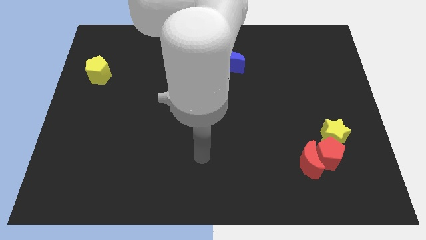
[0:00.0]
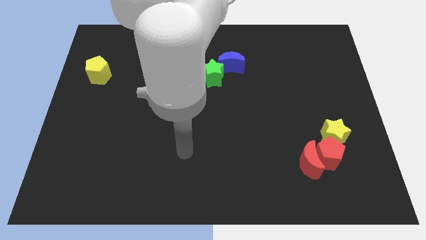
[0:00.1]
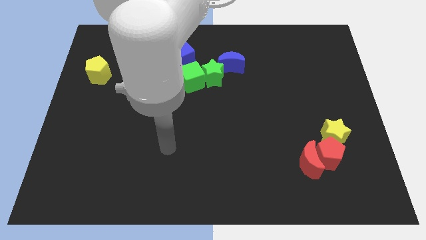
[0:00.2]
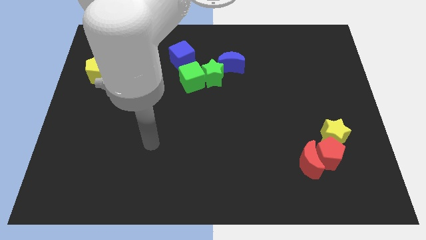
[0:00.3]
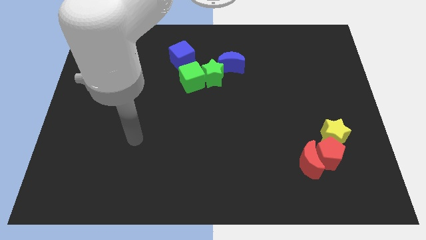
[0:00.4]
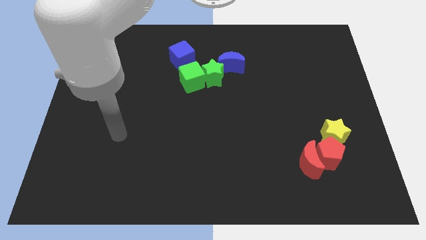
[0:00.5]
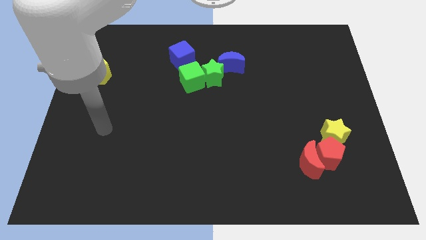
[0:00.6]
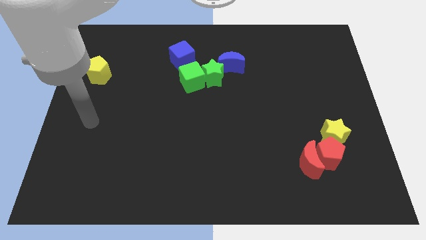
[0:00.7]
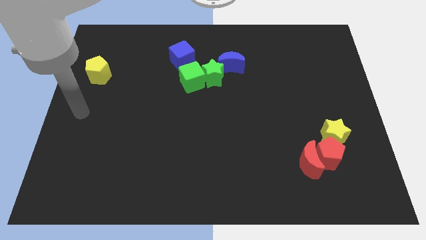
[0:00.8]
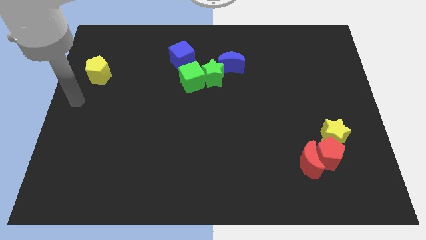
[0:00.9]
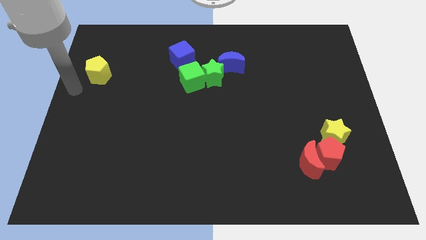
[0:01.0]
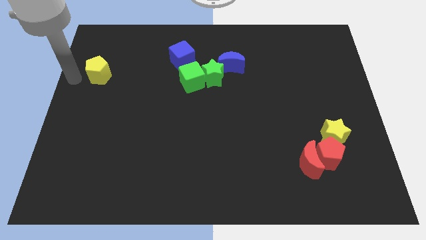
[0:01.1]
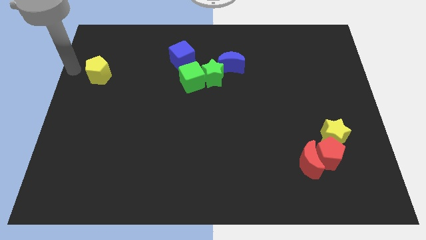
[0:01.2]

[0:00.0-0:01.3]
push your arm at the left side of the yellow pentagon

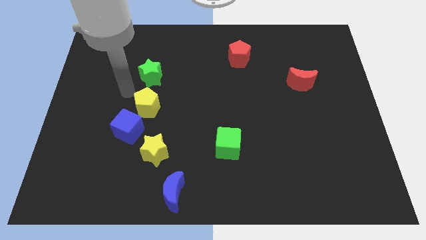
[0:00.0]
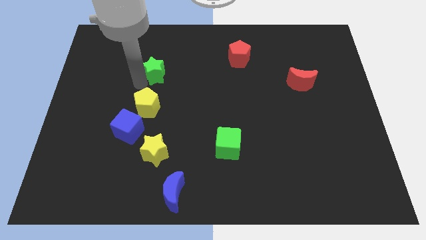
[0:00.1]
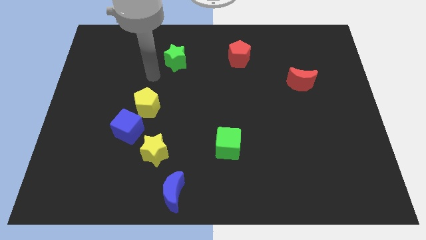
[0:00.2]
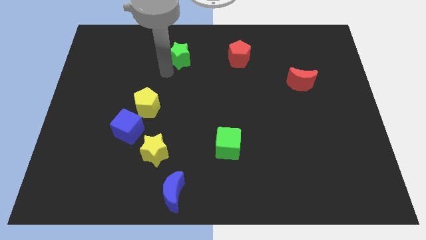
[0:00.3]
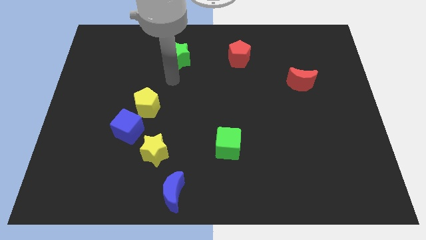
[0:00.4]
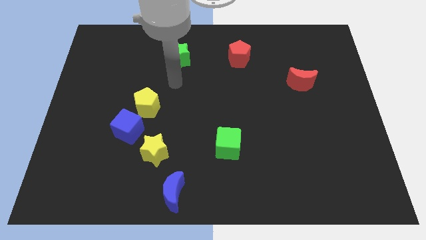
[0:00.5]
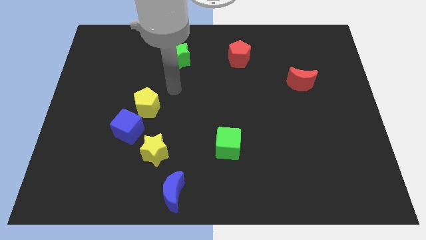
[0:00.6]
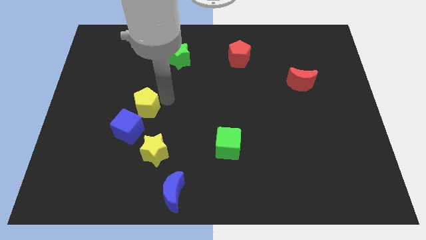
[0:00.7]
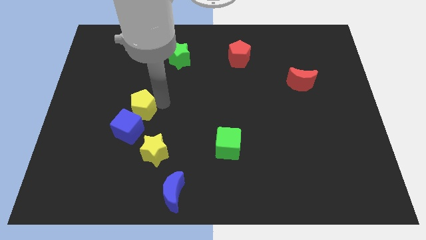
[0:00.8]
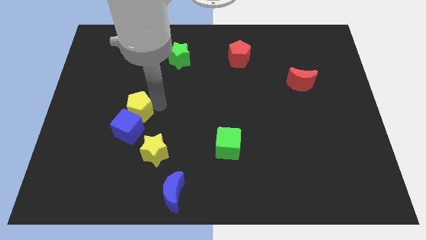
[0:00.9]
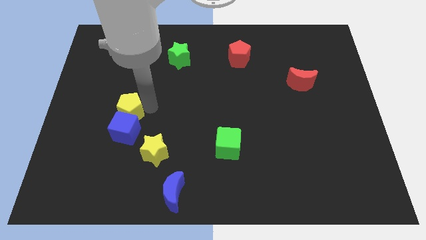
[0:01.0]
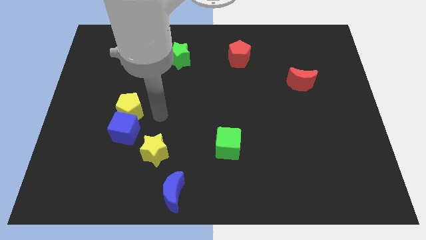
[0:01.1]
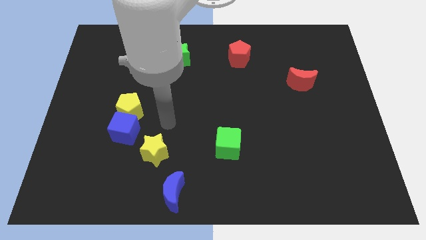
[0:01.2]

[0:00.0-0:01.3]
put the yellow pentagon into the blue cube

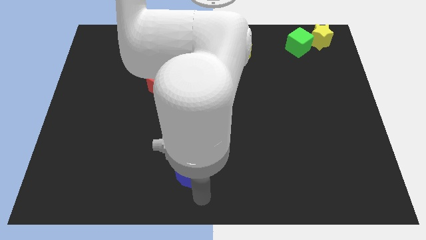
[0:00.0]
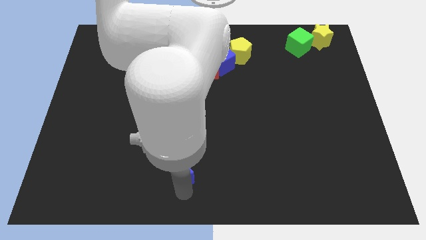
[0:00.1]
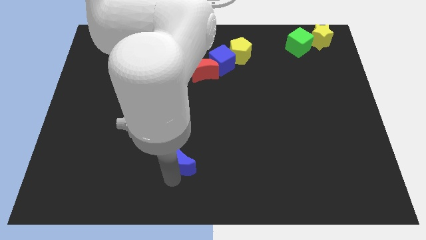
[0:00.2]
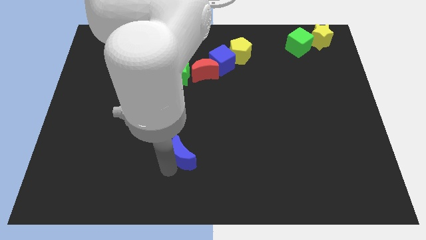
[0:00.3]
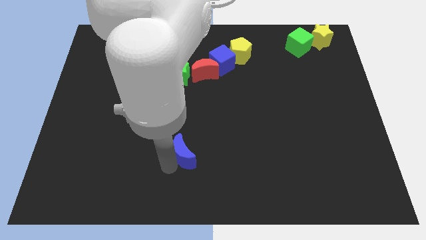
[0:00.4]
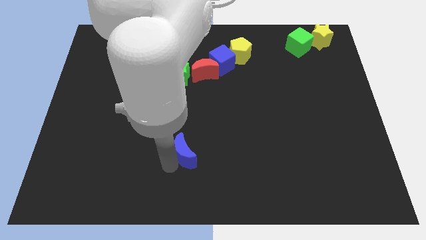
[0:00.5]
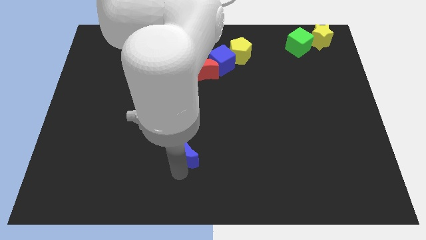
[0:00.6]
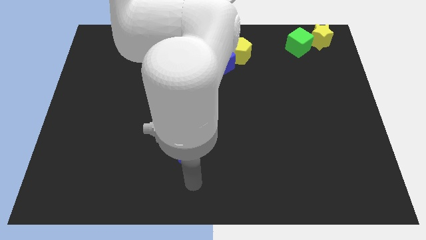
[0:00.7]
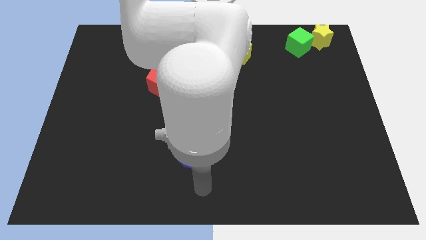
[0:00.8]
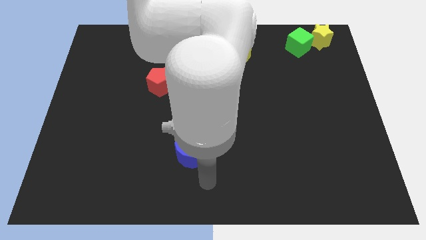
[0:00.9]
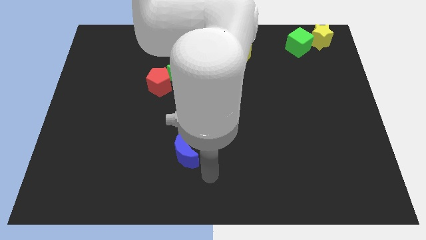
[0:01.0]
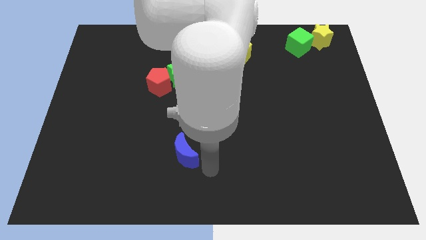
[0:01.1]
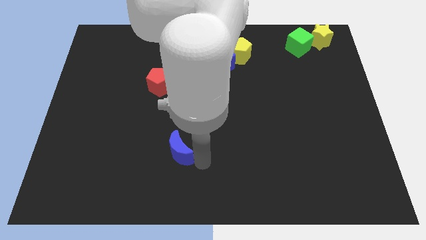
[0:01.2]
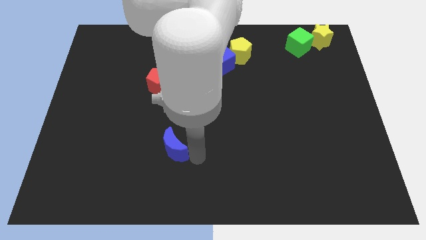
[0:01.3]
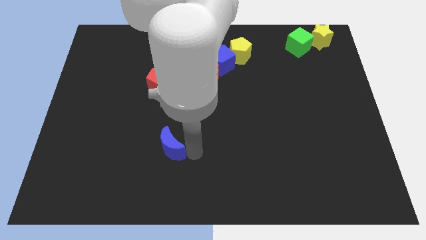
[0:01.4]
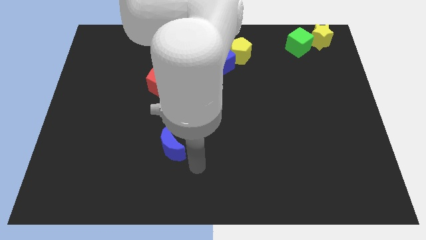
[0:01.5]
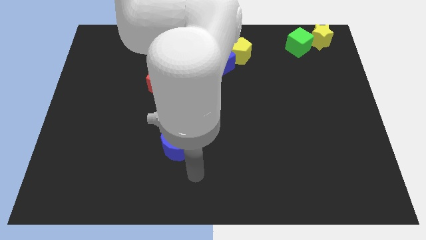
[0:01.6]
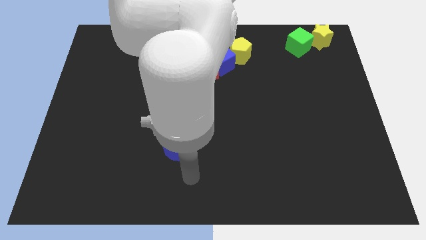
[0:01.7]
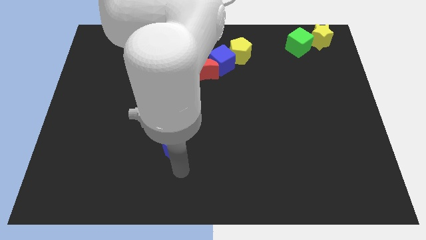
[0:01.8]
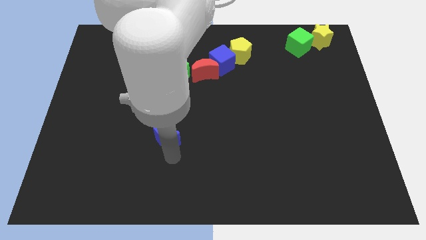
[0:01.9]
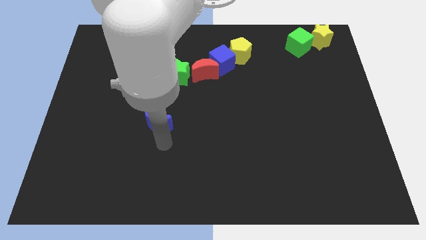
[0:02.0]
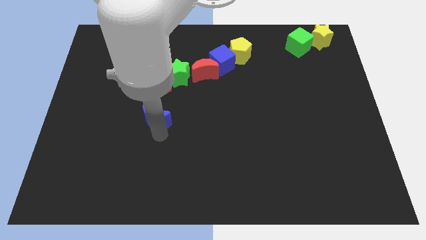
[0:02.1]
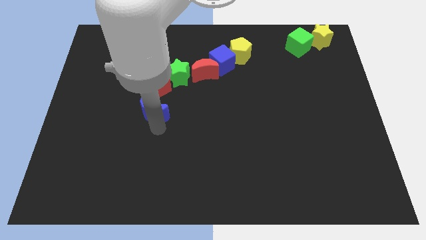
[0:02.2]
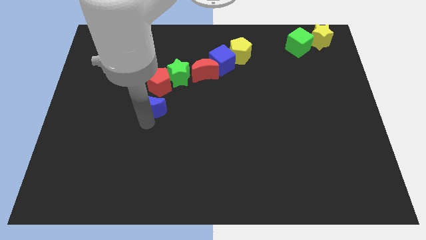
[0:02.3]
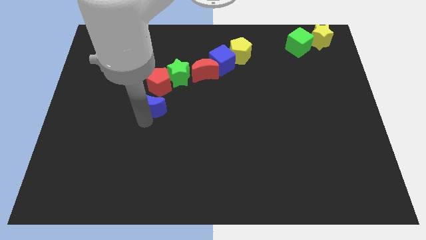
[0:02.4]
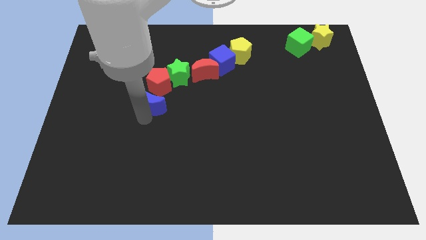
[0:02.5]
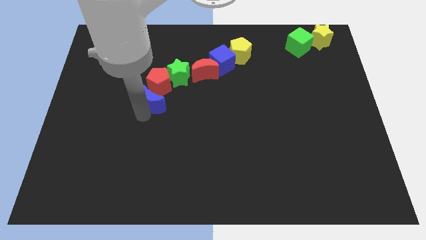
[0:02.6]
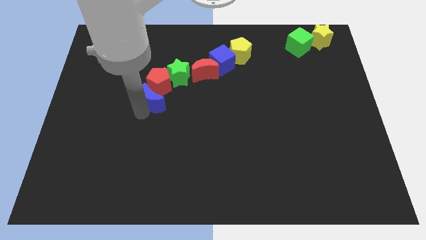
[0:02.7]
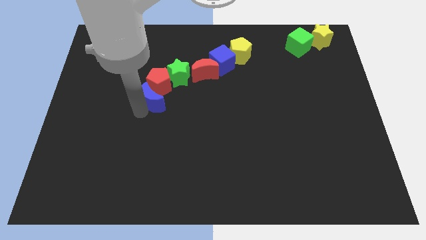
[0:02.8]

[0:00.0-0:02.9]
push the blue crescent to the bottom of the red pentagon

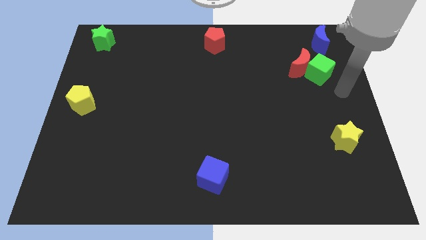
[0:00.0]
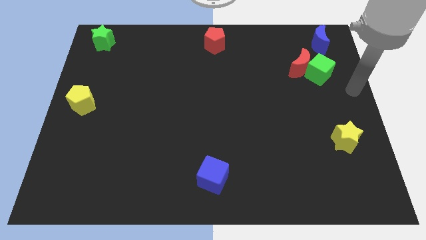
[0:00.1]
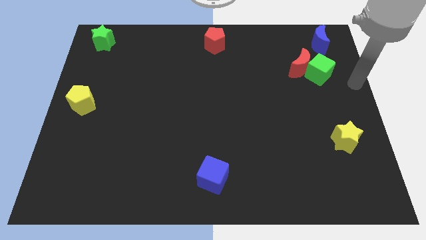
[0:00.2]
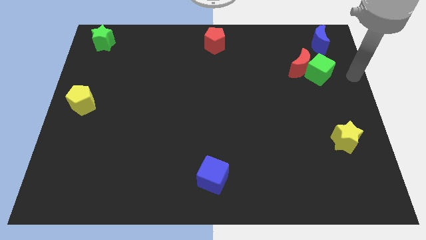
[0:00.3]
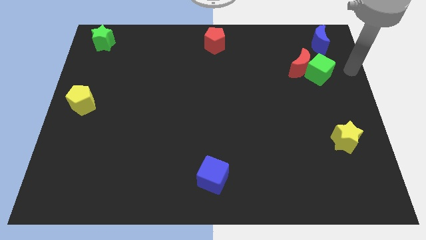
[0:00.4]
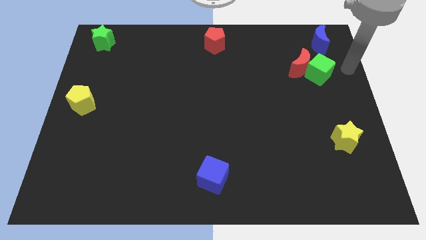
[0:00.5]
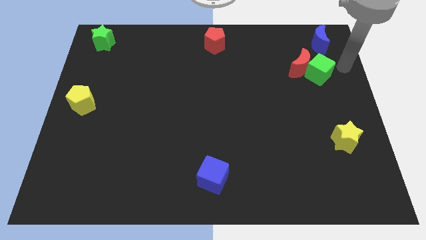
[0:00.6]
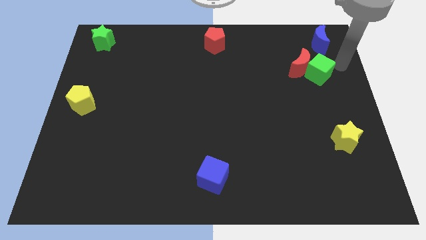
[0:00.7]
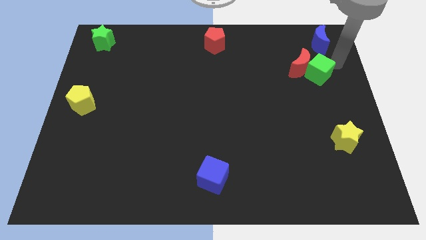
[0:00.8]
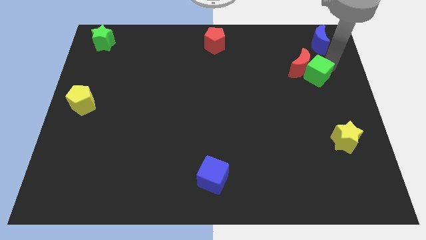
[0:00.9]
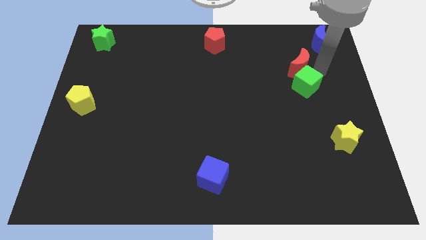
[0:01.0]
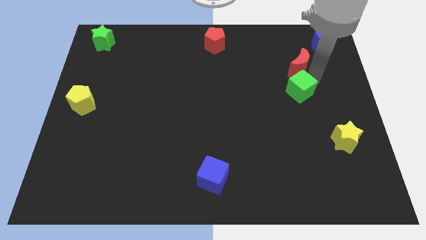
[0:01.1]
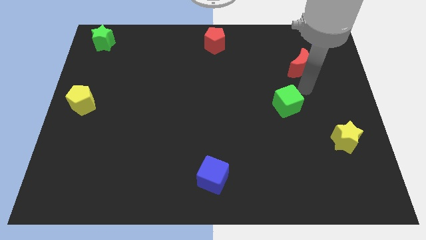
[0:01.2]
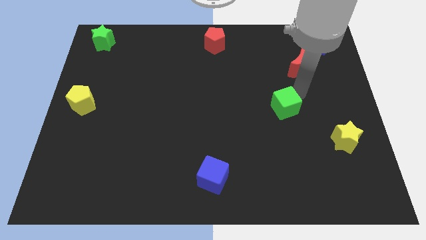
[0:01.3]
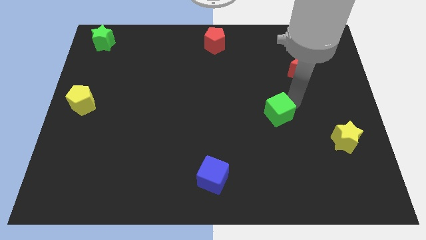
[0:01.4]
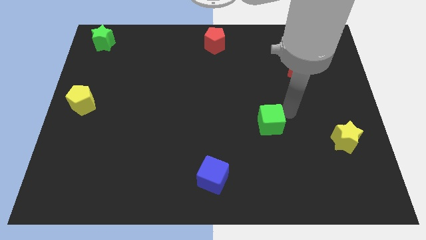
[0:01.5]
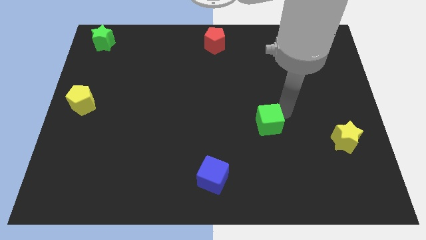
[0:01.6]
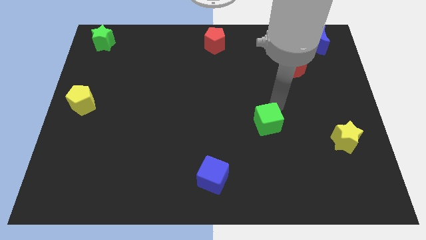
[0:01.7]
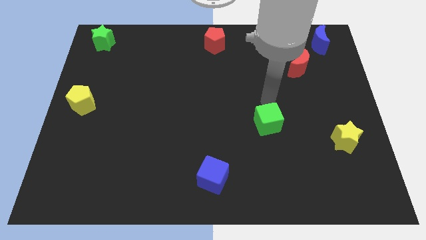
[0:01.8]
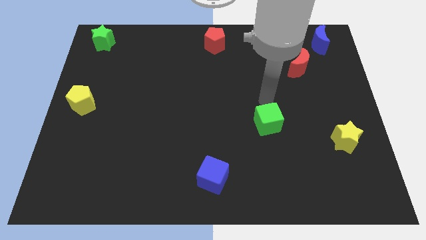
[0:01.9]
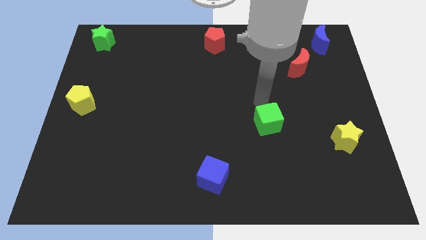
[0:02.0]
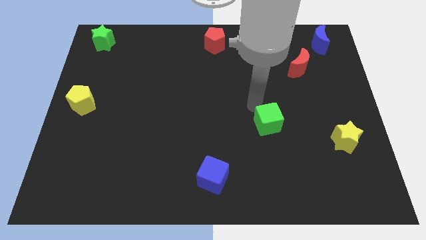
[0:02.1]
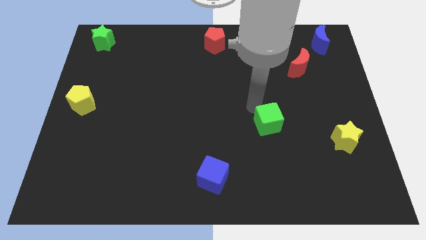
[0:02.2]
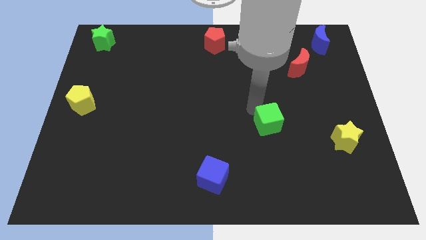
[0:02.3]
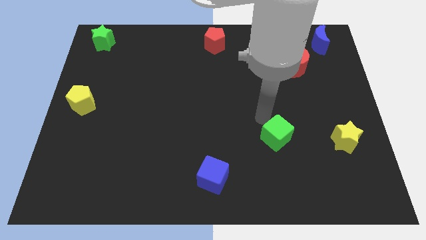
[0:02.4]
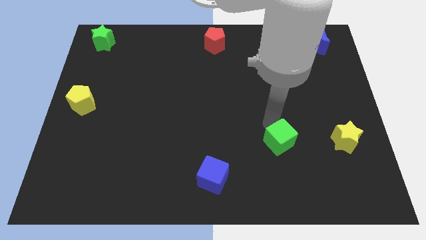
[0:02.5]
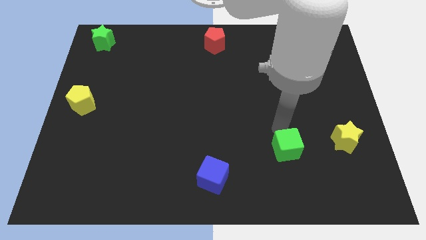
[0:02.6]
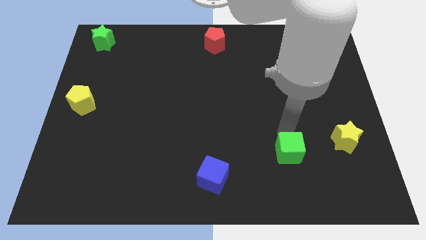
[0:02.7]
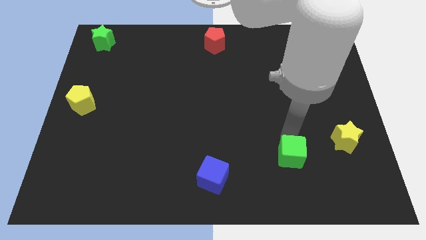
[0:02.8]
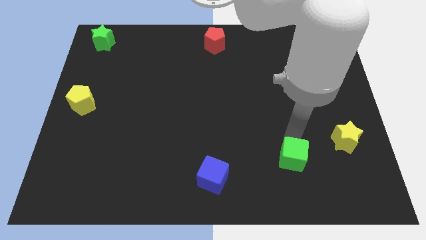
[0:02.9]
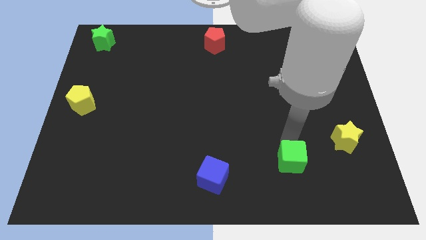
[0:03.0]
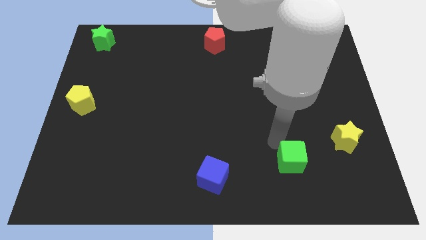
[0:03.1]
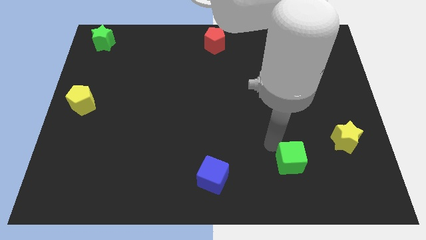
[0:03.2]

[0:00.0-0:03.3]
place the green cube between the yellow star and blue cube

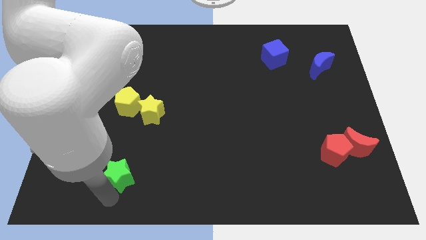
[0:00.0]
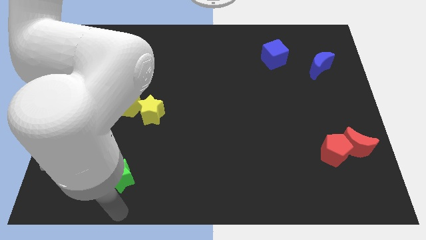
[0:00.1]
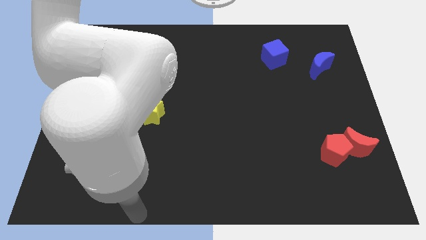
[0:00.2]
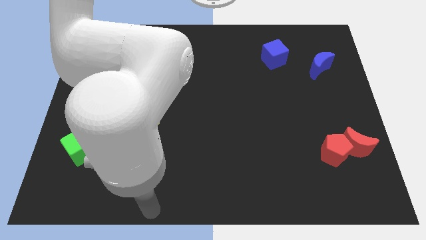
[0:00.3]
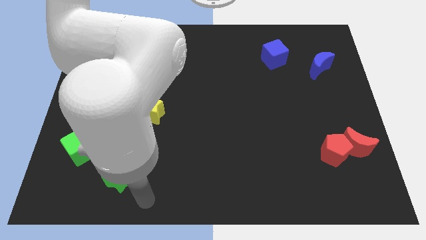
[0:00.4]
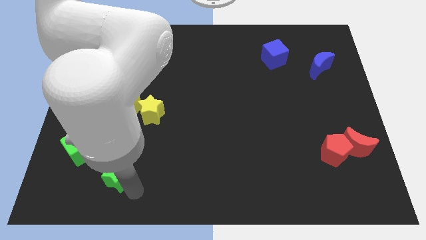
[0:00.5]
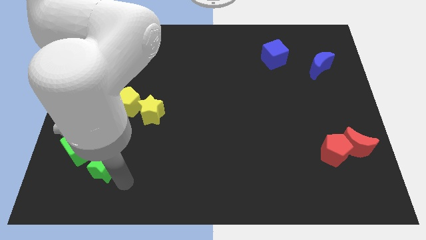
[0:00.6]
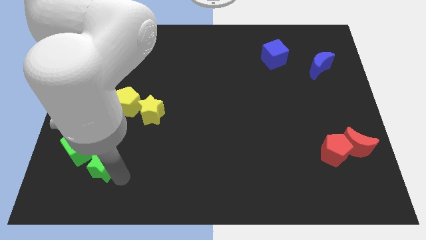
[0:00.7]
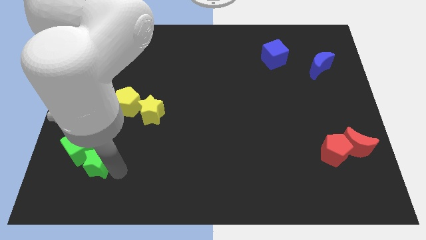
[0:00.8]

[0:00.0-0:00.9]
place the green star close to green cube
